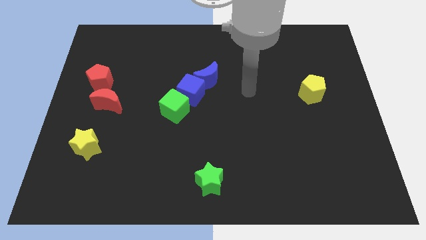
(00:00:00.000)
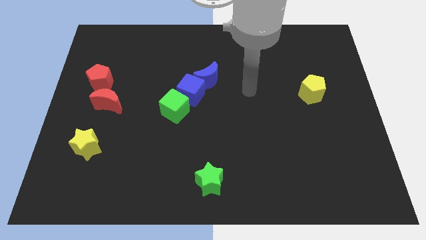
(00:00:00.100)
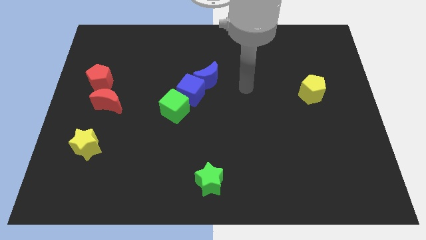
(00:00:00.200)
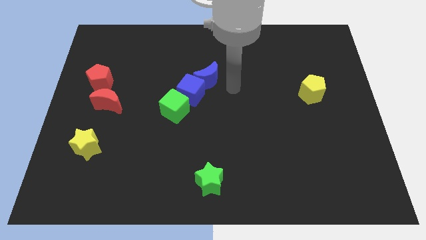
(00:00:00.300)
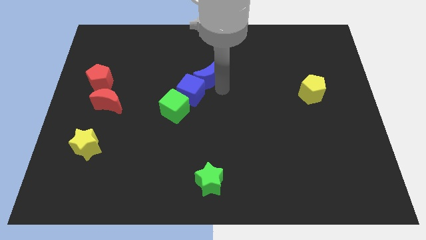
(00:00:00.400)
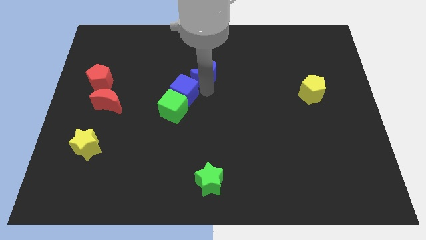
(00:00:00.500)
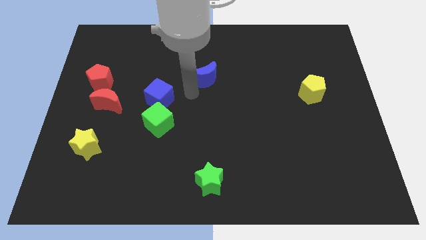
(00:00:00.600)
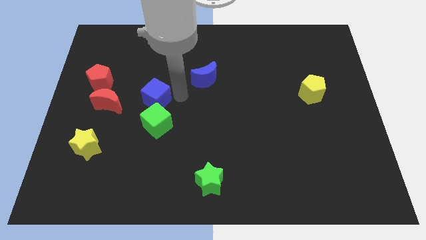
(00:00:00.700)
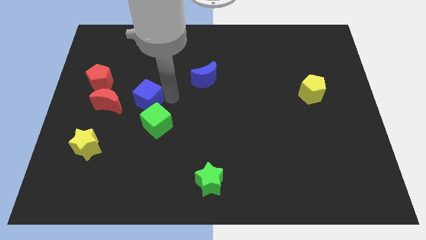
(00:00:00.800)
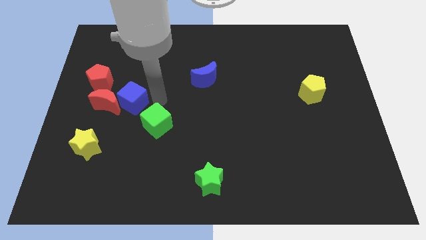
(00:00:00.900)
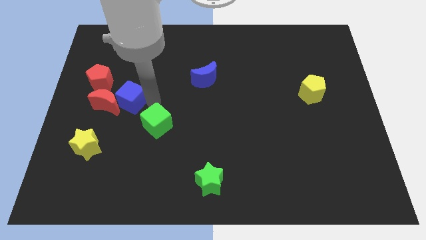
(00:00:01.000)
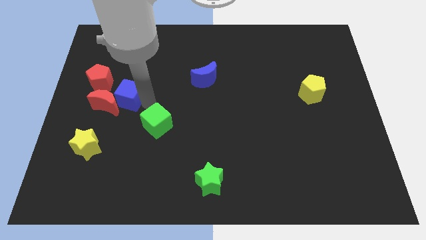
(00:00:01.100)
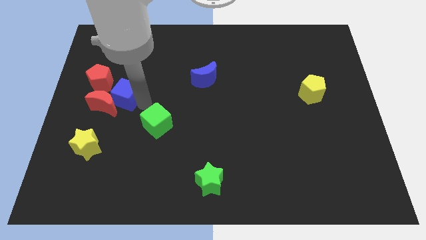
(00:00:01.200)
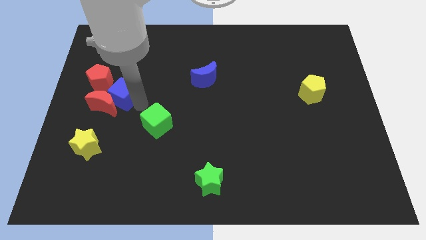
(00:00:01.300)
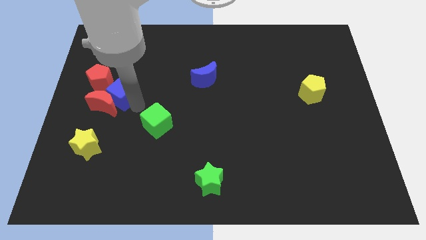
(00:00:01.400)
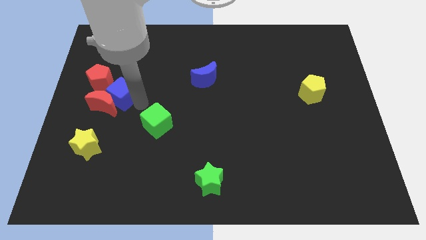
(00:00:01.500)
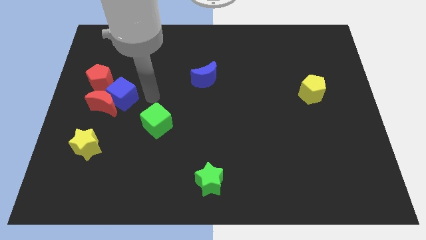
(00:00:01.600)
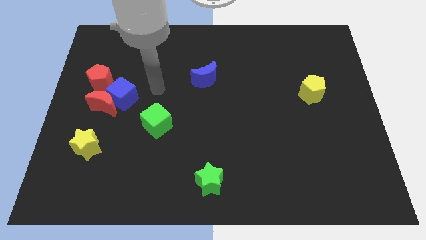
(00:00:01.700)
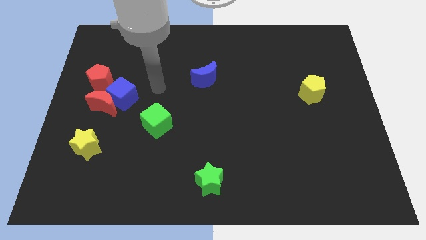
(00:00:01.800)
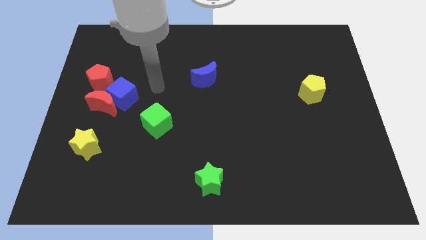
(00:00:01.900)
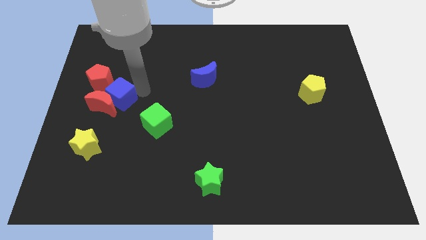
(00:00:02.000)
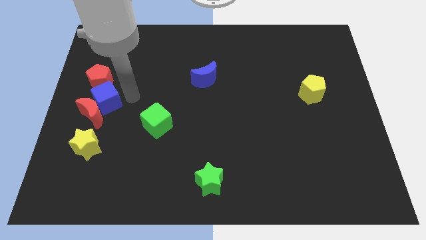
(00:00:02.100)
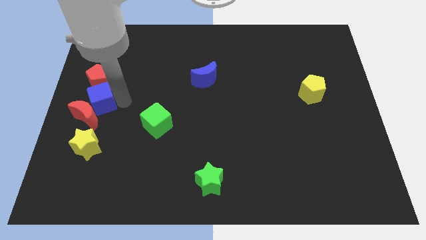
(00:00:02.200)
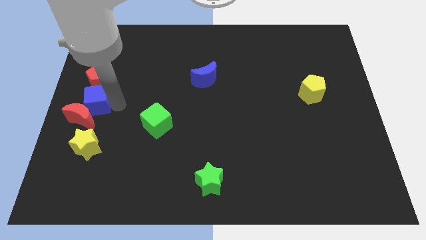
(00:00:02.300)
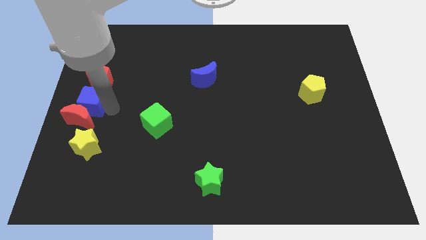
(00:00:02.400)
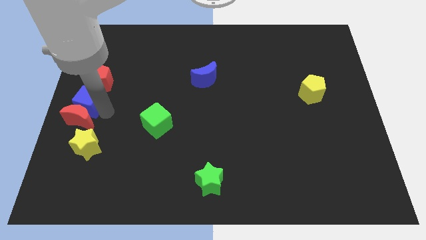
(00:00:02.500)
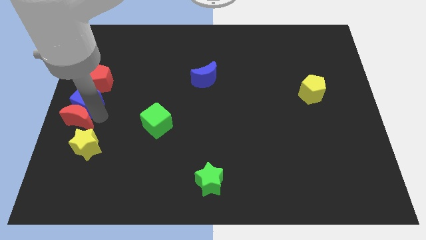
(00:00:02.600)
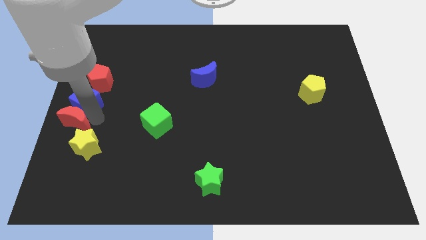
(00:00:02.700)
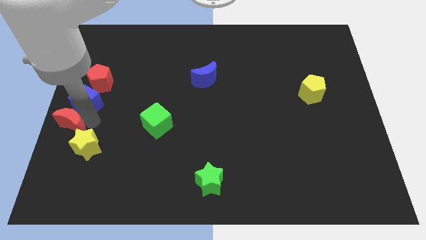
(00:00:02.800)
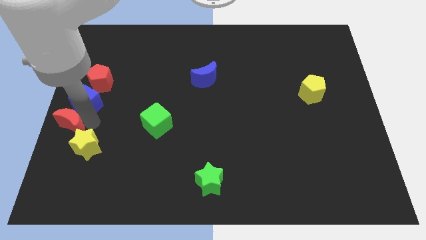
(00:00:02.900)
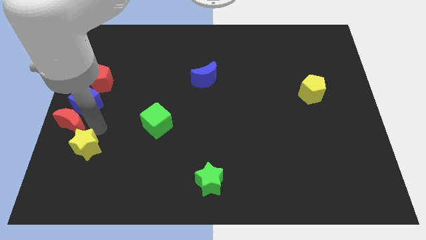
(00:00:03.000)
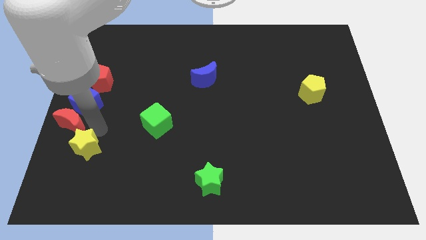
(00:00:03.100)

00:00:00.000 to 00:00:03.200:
place the blue cube in between red crescent and red pentagon

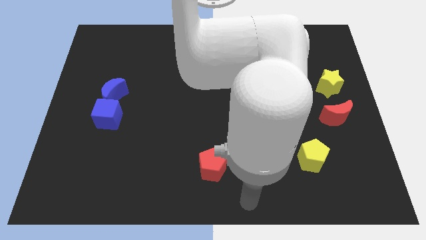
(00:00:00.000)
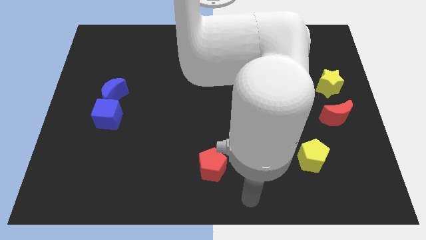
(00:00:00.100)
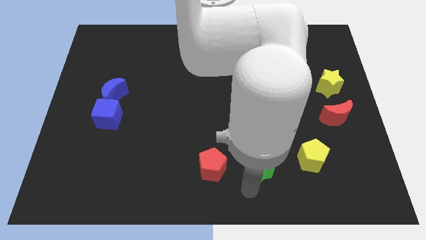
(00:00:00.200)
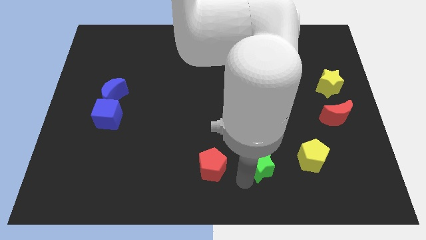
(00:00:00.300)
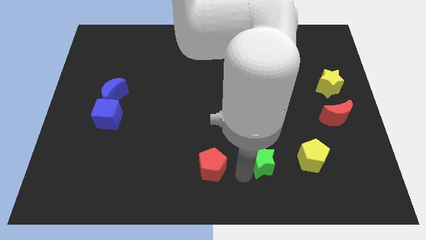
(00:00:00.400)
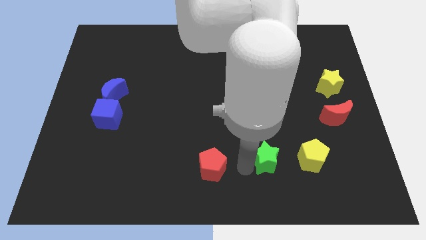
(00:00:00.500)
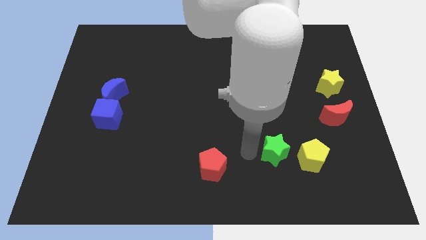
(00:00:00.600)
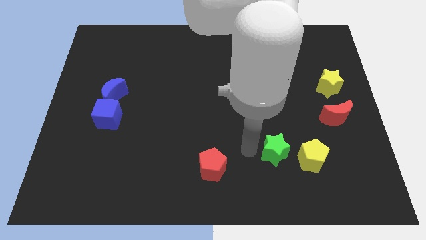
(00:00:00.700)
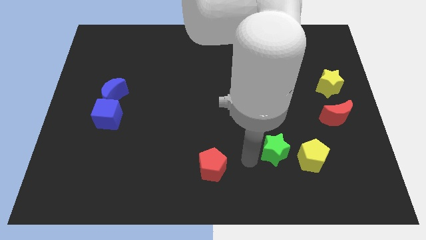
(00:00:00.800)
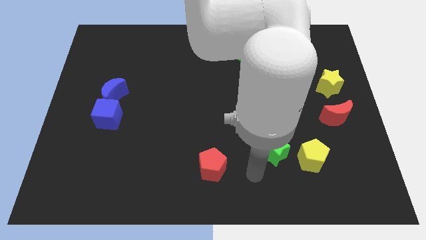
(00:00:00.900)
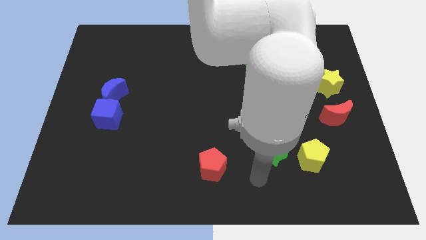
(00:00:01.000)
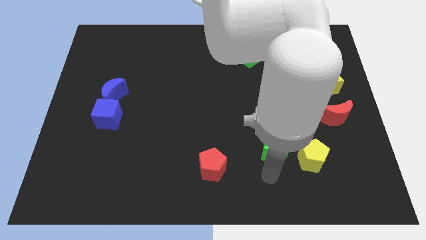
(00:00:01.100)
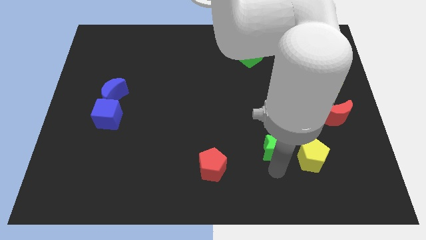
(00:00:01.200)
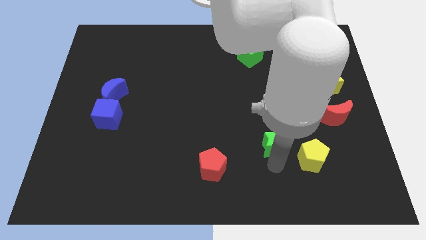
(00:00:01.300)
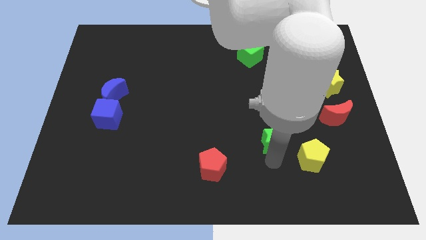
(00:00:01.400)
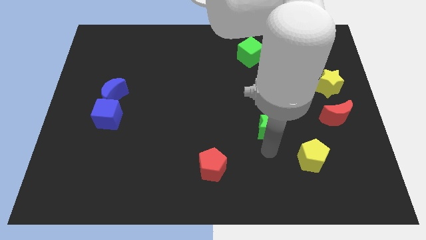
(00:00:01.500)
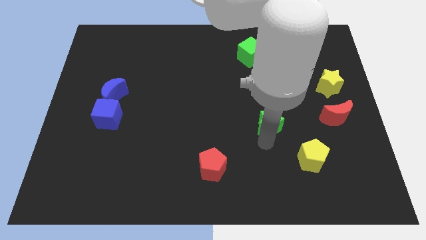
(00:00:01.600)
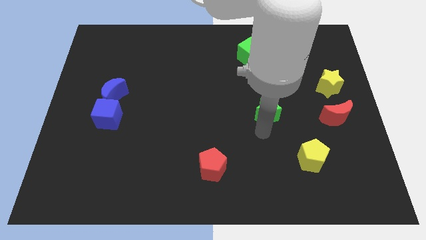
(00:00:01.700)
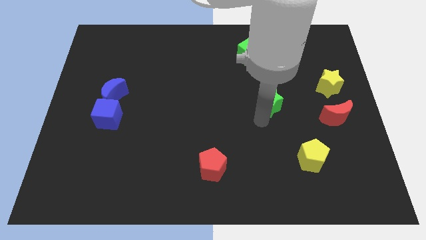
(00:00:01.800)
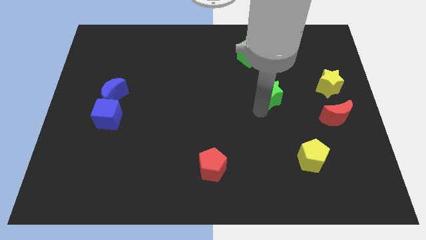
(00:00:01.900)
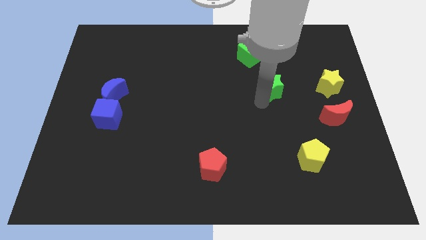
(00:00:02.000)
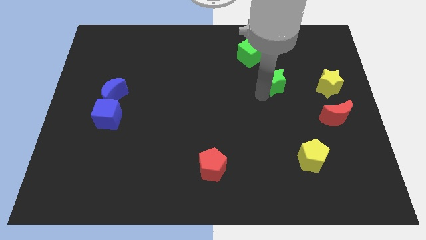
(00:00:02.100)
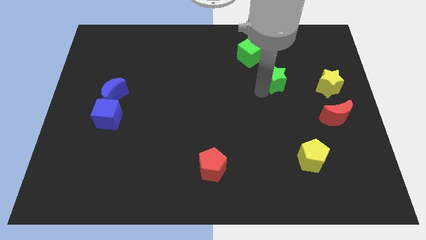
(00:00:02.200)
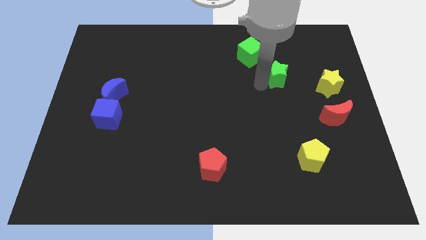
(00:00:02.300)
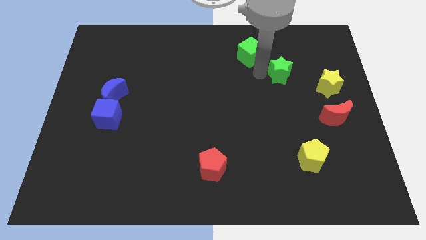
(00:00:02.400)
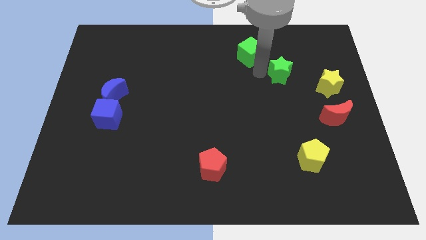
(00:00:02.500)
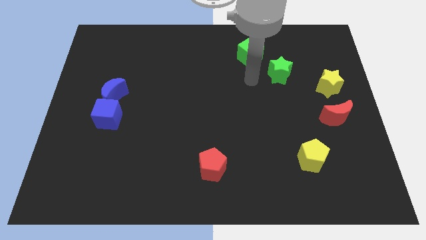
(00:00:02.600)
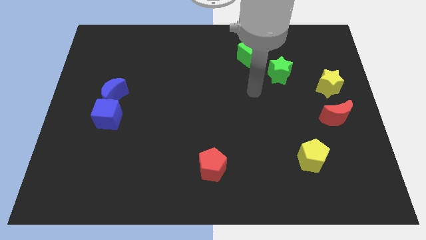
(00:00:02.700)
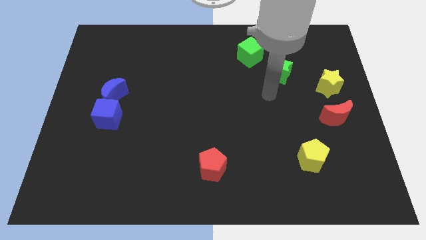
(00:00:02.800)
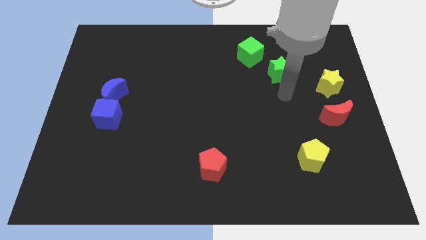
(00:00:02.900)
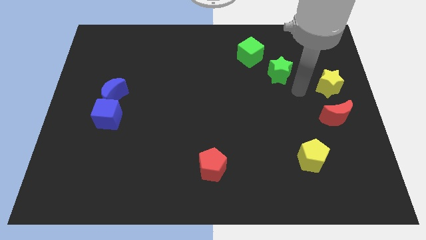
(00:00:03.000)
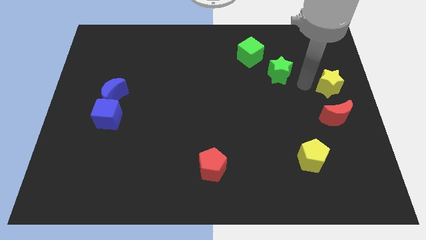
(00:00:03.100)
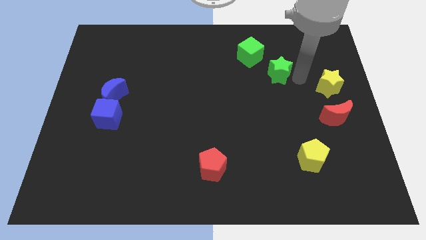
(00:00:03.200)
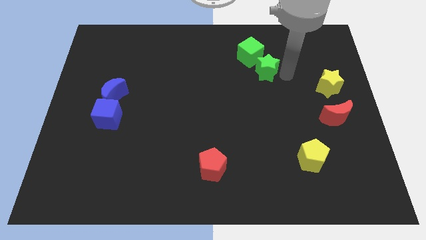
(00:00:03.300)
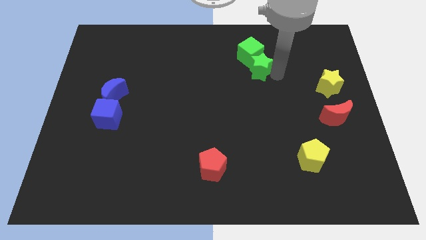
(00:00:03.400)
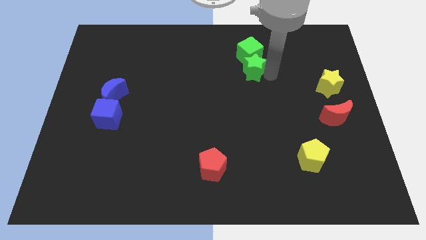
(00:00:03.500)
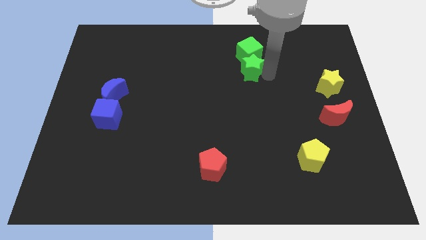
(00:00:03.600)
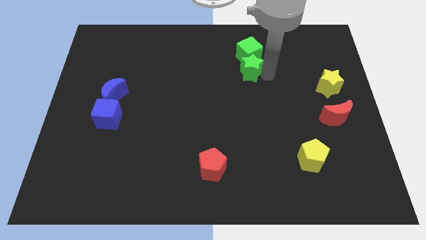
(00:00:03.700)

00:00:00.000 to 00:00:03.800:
move the green star to the bottom of the green cube

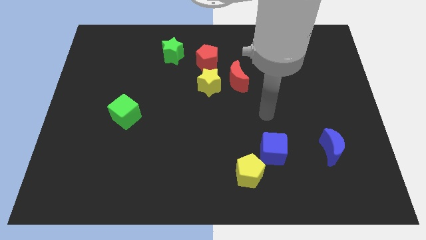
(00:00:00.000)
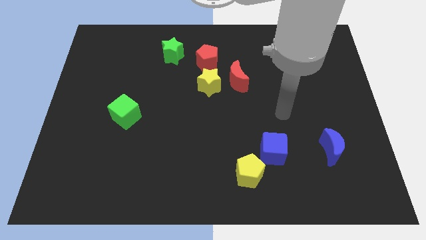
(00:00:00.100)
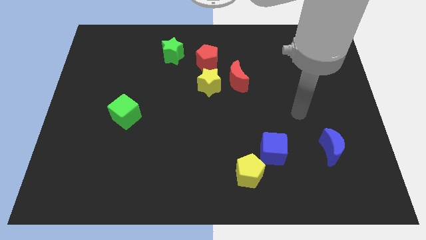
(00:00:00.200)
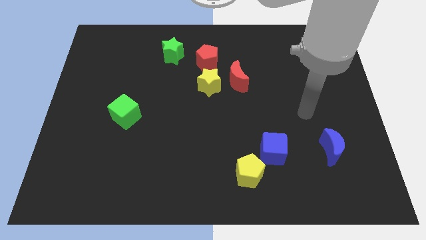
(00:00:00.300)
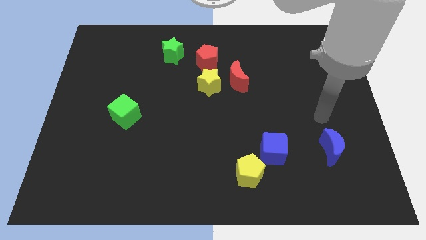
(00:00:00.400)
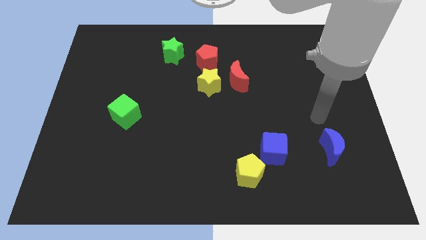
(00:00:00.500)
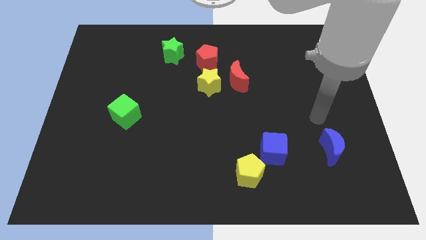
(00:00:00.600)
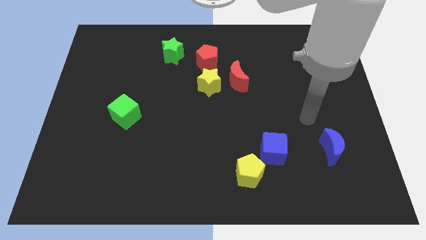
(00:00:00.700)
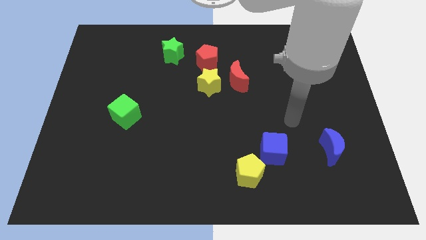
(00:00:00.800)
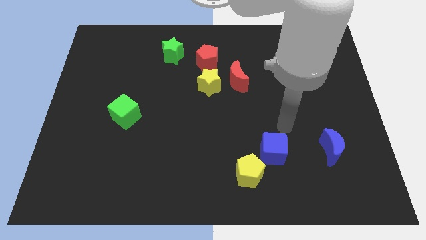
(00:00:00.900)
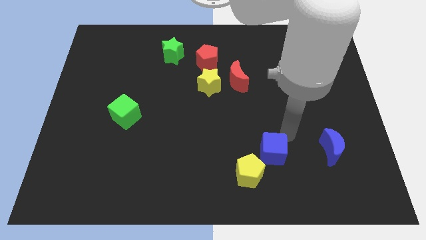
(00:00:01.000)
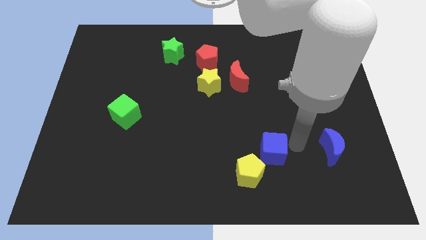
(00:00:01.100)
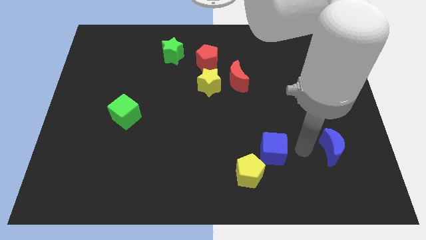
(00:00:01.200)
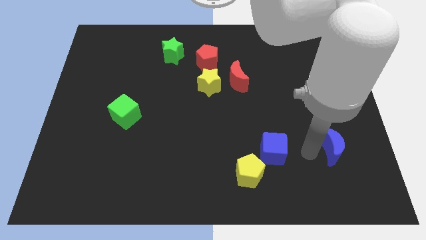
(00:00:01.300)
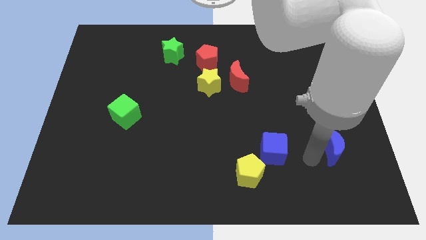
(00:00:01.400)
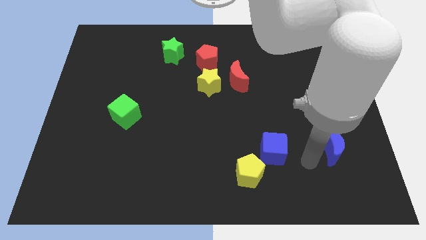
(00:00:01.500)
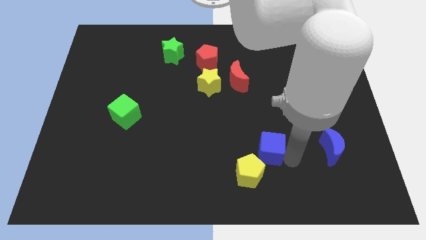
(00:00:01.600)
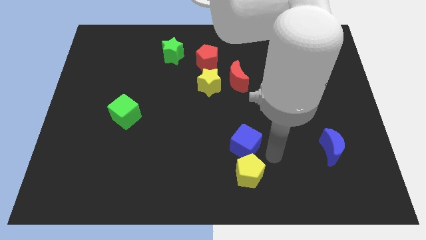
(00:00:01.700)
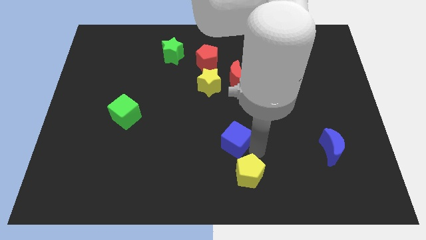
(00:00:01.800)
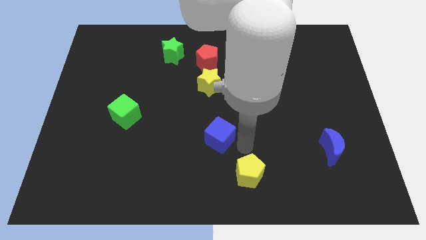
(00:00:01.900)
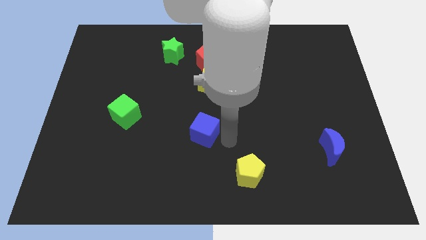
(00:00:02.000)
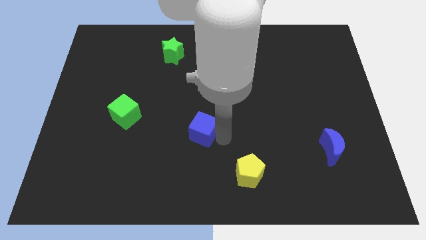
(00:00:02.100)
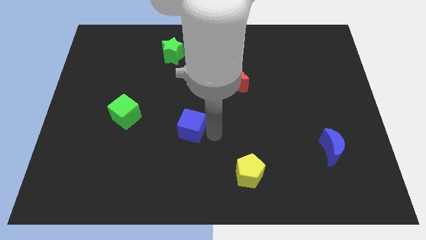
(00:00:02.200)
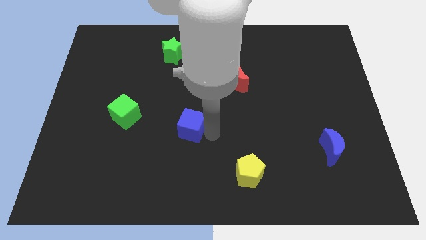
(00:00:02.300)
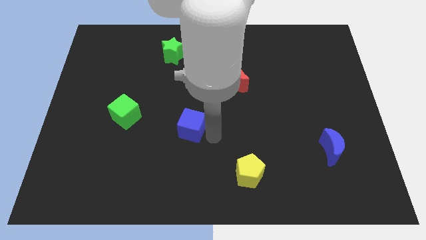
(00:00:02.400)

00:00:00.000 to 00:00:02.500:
separate blue cube from yellow pentagon
